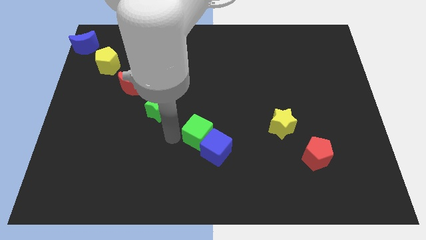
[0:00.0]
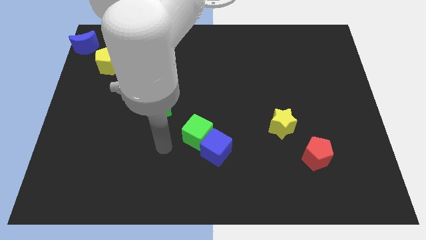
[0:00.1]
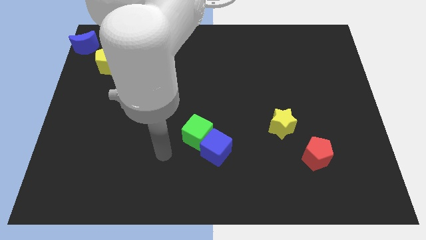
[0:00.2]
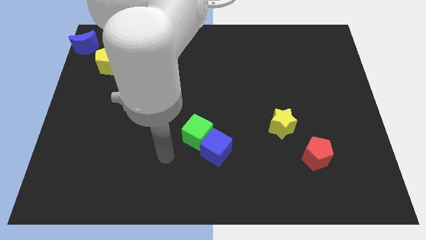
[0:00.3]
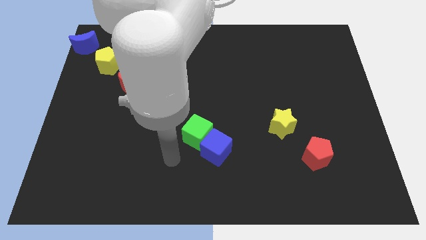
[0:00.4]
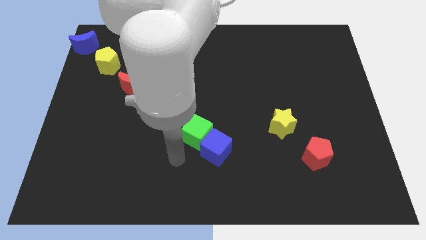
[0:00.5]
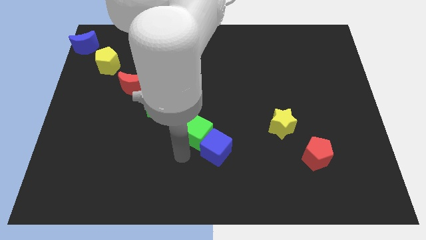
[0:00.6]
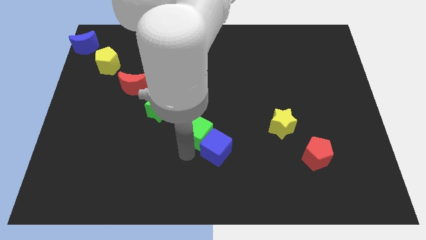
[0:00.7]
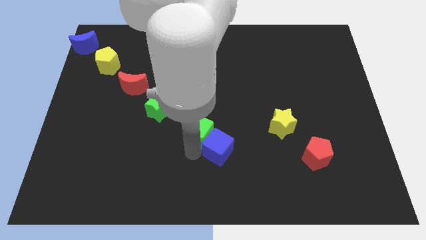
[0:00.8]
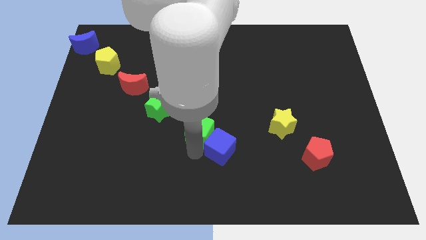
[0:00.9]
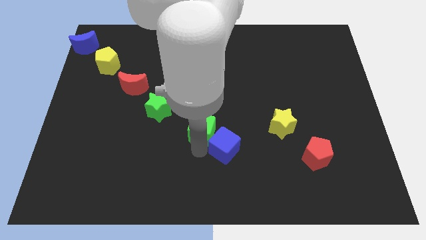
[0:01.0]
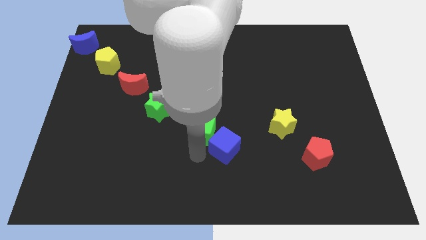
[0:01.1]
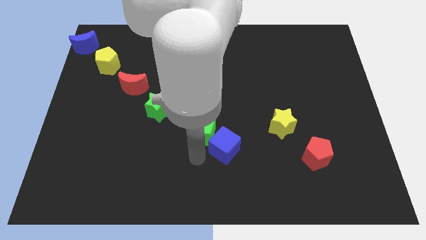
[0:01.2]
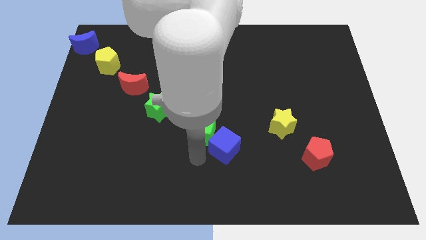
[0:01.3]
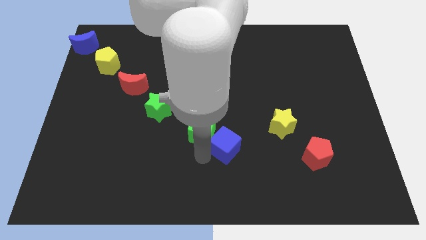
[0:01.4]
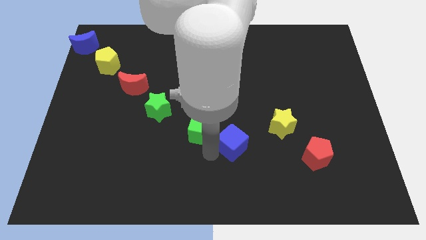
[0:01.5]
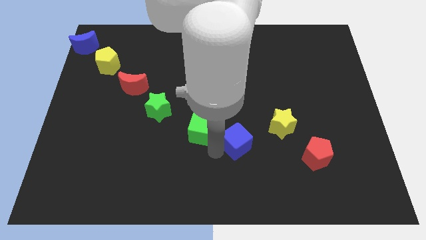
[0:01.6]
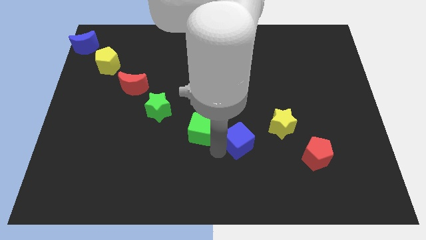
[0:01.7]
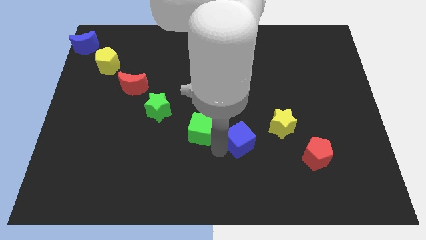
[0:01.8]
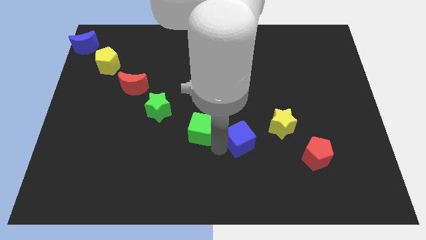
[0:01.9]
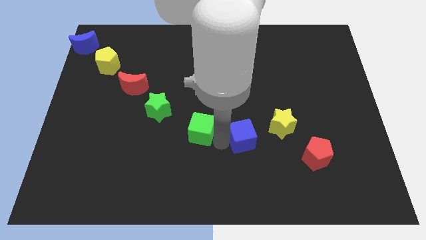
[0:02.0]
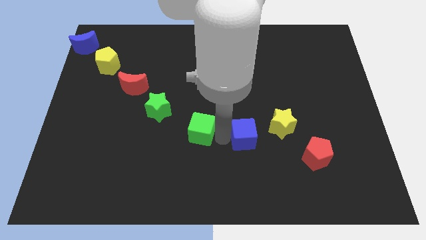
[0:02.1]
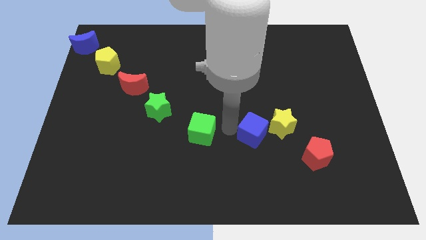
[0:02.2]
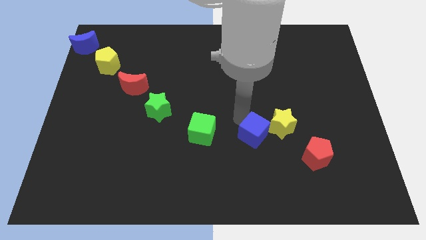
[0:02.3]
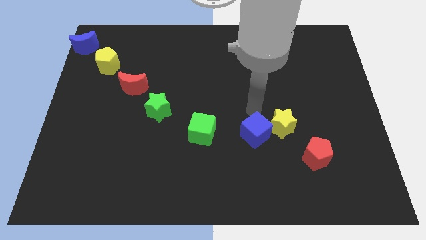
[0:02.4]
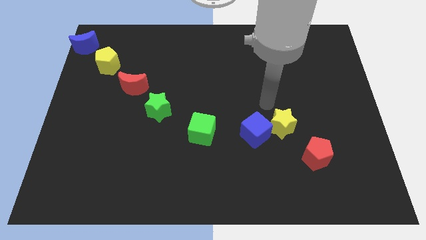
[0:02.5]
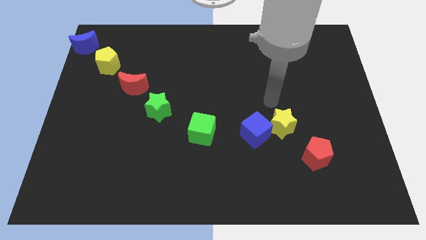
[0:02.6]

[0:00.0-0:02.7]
separate the green and blue cubes

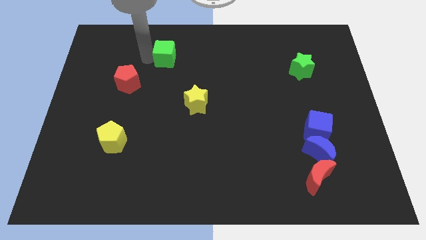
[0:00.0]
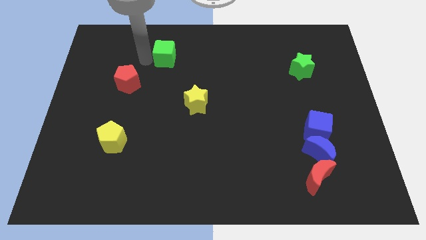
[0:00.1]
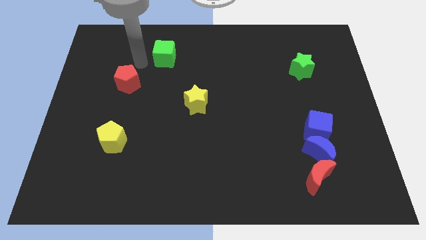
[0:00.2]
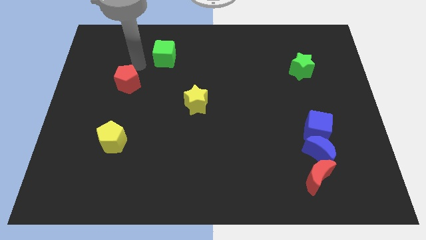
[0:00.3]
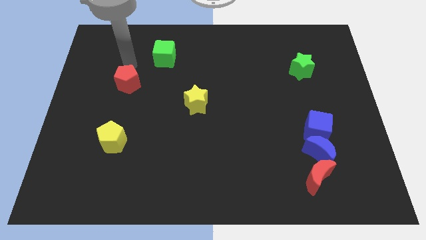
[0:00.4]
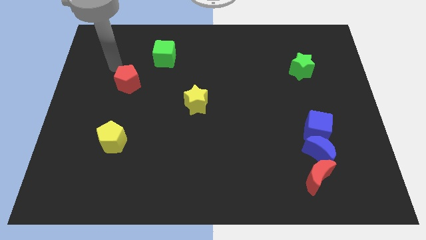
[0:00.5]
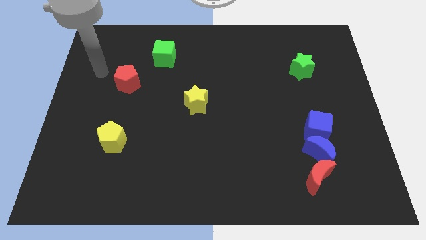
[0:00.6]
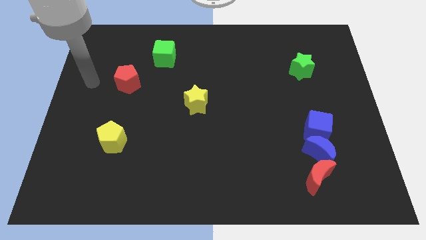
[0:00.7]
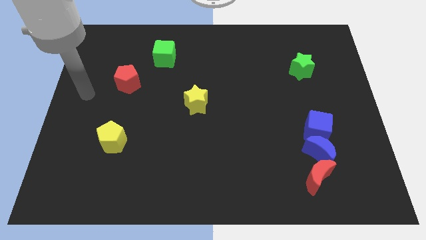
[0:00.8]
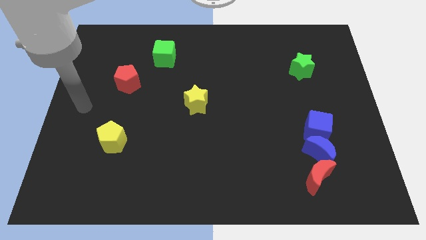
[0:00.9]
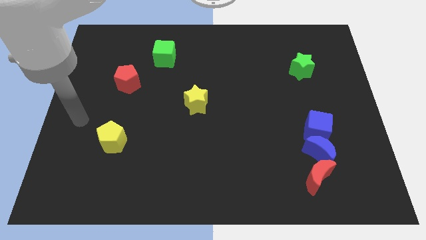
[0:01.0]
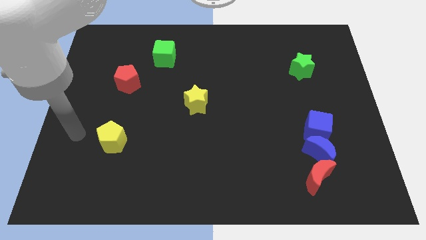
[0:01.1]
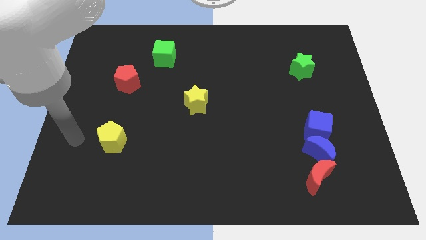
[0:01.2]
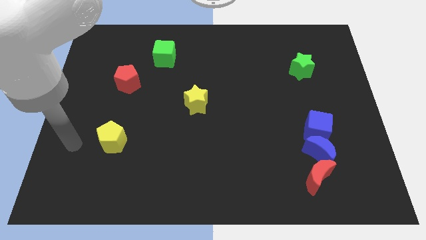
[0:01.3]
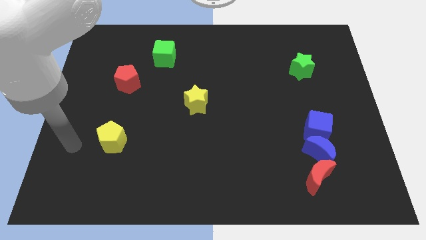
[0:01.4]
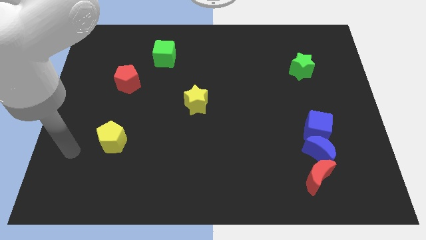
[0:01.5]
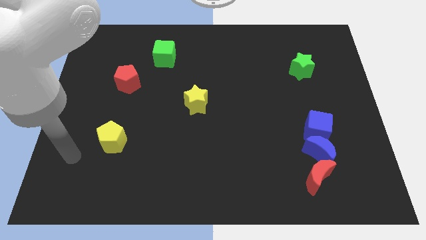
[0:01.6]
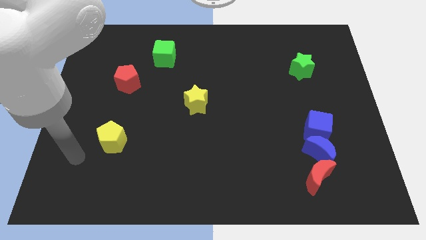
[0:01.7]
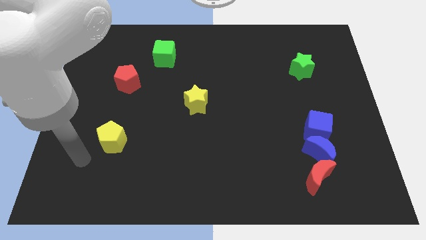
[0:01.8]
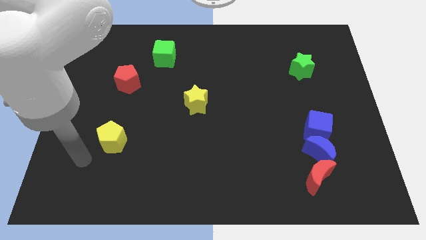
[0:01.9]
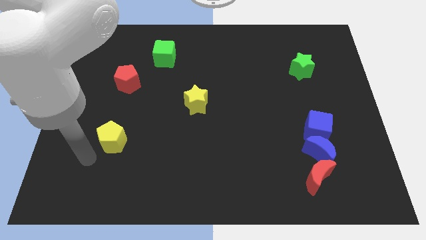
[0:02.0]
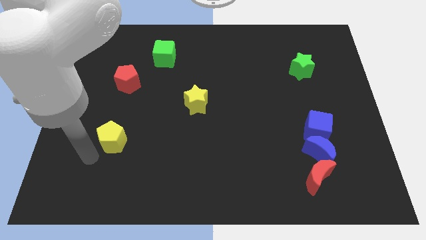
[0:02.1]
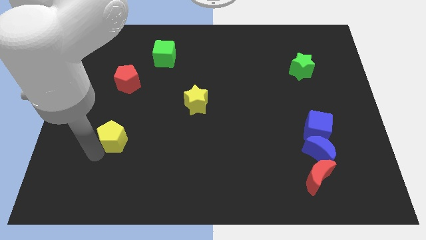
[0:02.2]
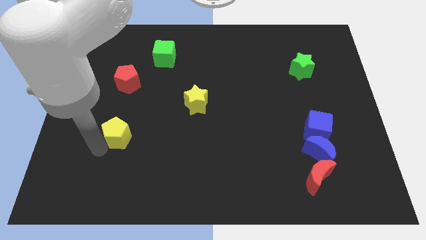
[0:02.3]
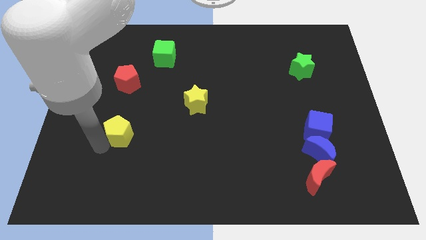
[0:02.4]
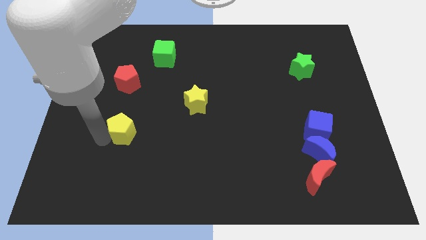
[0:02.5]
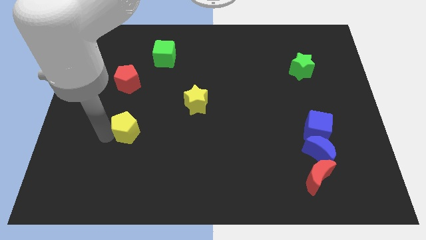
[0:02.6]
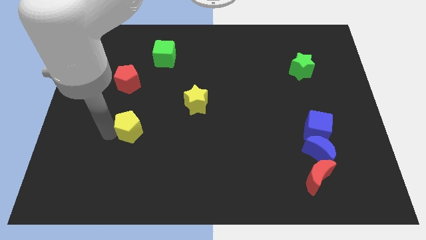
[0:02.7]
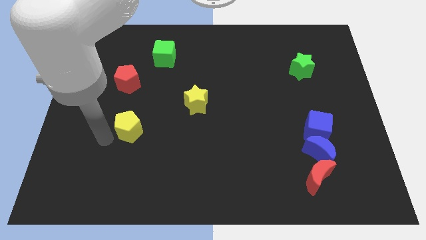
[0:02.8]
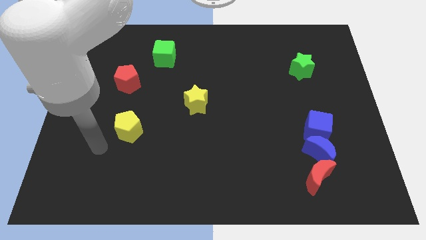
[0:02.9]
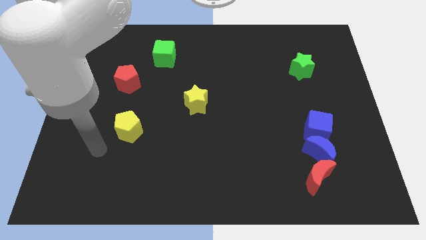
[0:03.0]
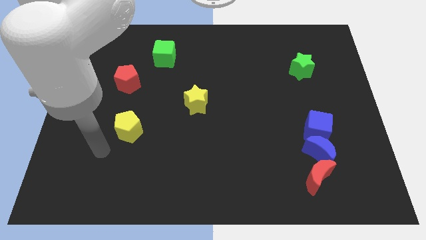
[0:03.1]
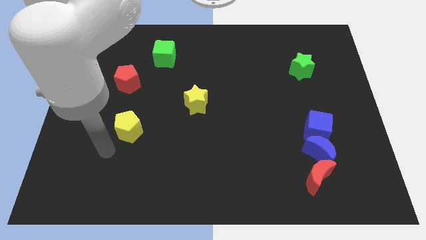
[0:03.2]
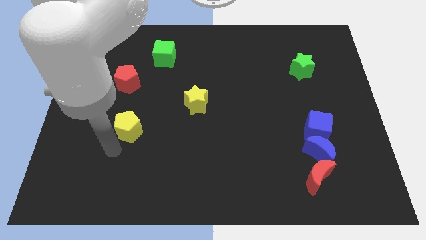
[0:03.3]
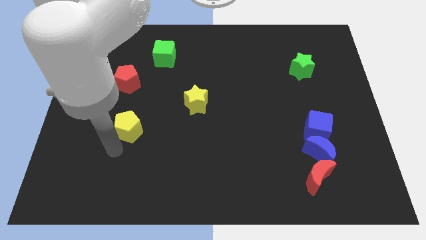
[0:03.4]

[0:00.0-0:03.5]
push the yellow pentagon slightly to the top

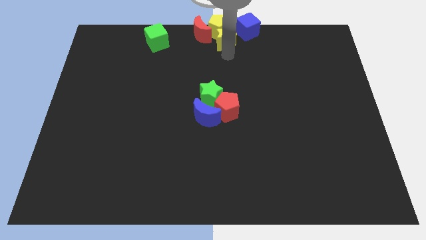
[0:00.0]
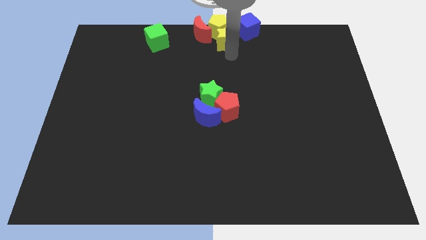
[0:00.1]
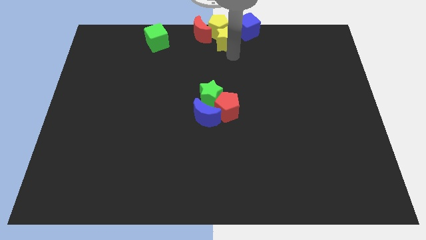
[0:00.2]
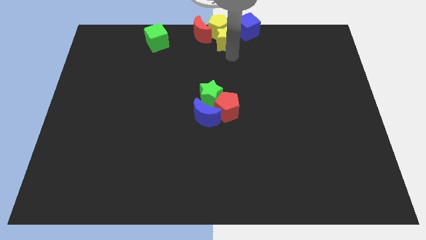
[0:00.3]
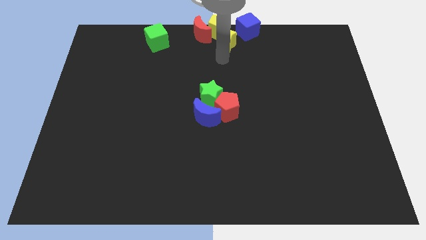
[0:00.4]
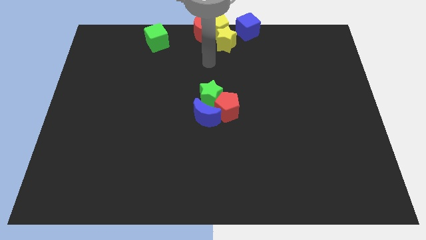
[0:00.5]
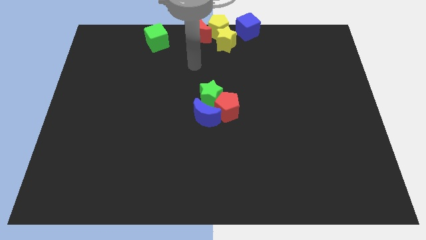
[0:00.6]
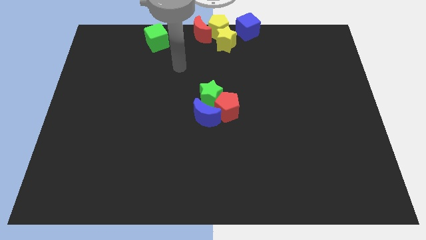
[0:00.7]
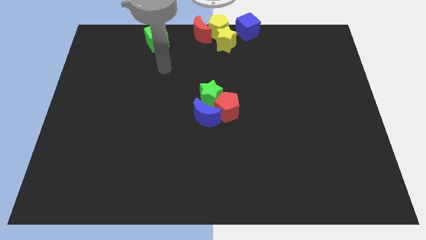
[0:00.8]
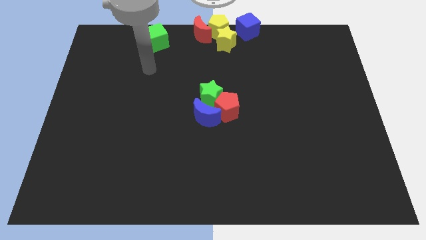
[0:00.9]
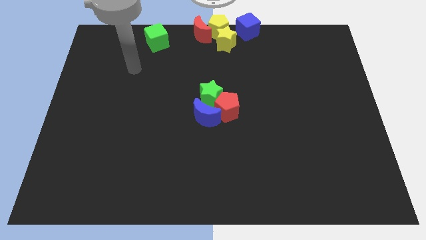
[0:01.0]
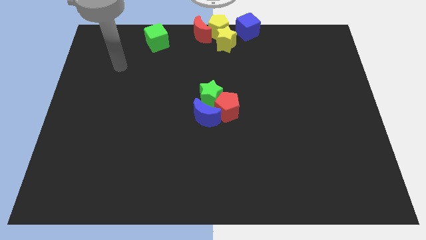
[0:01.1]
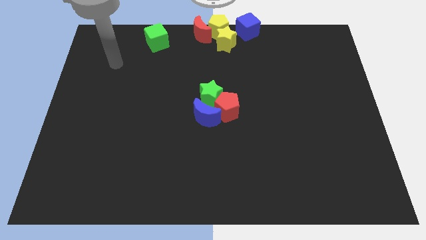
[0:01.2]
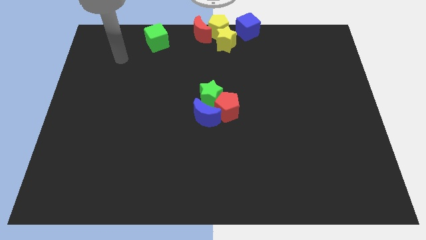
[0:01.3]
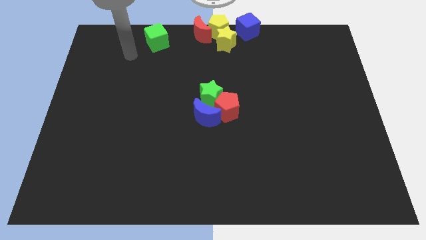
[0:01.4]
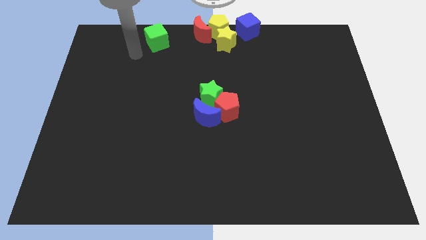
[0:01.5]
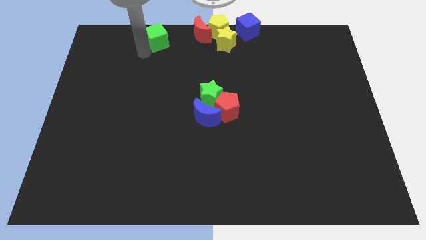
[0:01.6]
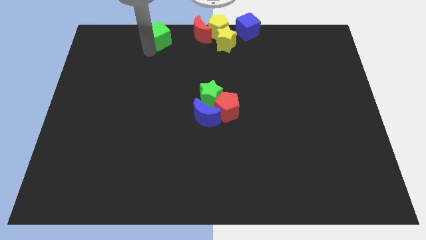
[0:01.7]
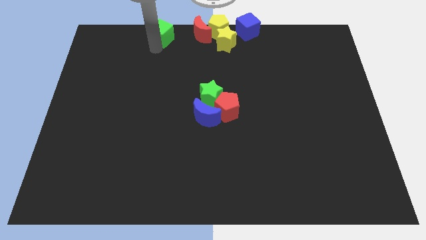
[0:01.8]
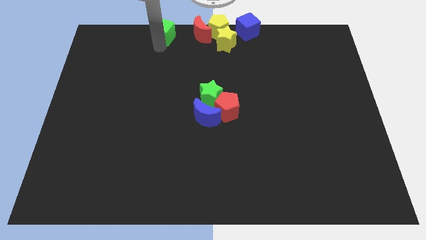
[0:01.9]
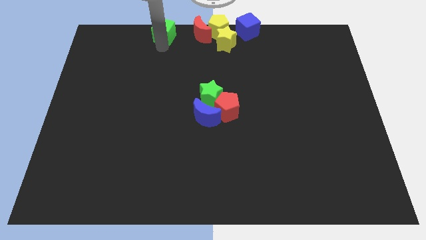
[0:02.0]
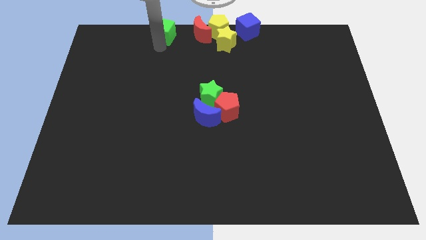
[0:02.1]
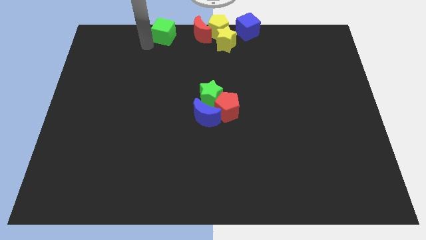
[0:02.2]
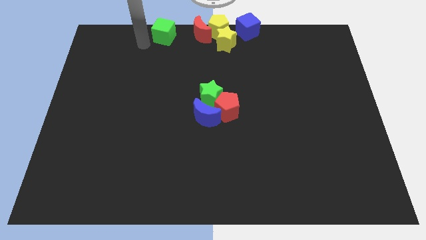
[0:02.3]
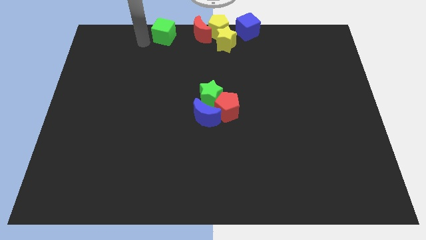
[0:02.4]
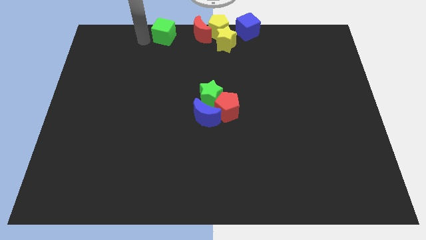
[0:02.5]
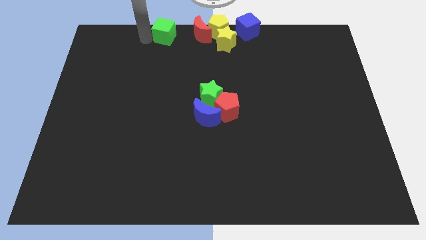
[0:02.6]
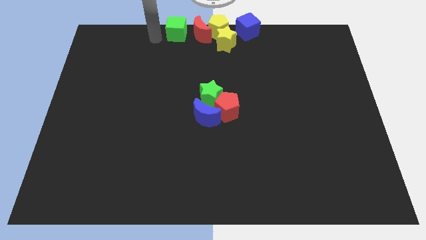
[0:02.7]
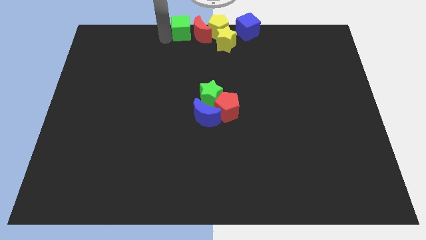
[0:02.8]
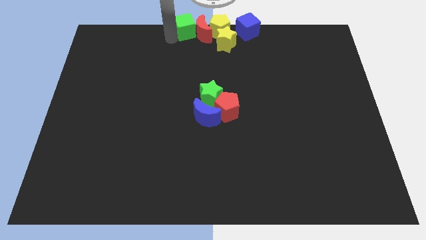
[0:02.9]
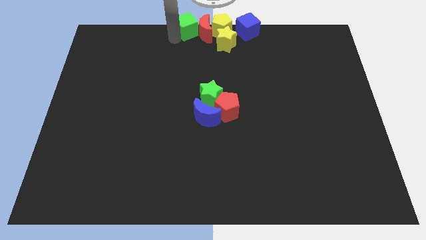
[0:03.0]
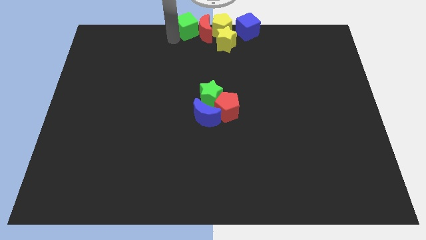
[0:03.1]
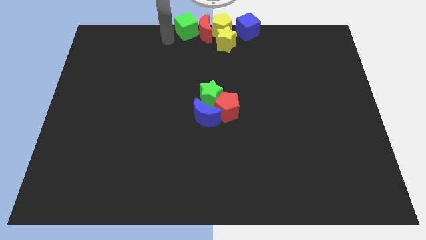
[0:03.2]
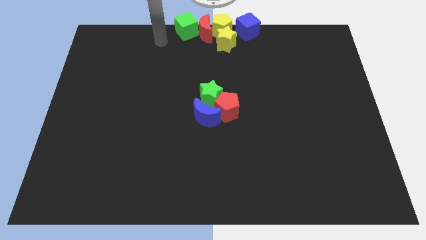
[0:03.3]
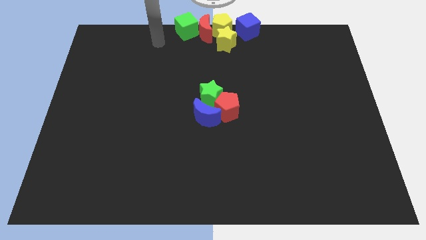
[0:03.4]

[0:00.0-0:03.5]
place green cube left to red moon
